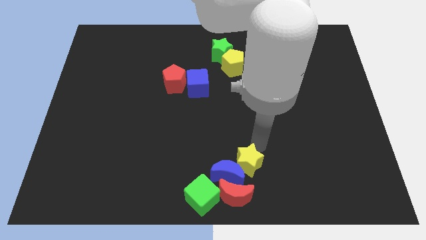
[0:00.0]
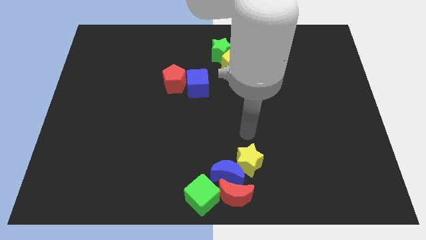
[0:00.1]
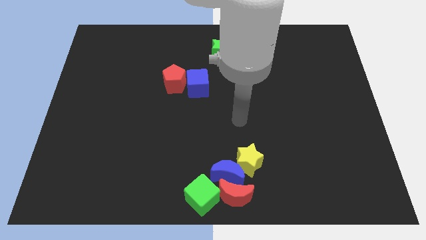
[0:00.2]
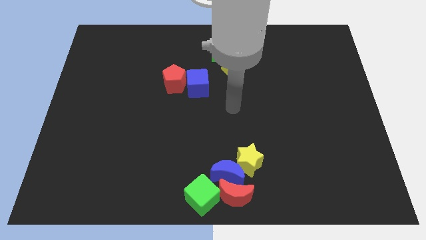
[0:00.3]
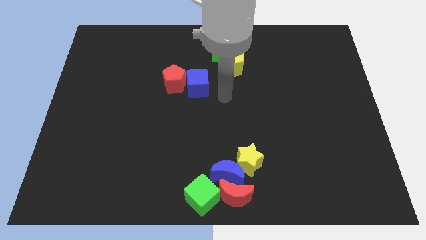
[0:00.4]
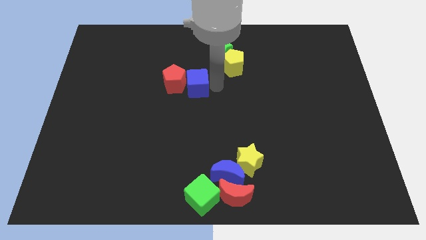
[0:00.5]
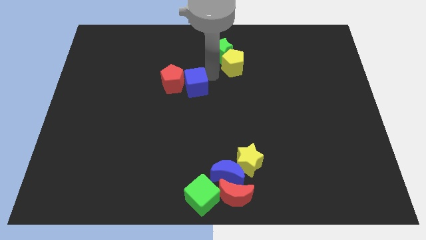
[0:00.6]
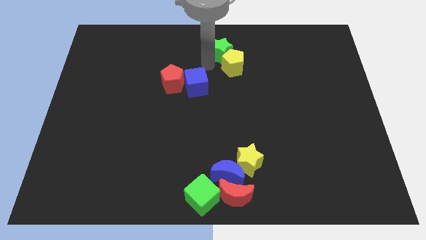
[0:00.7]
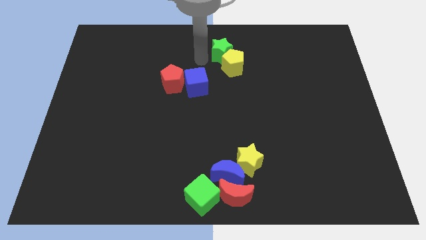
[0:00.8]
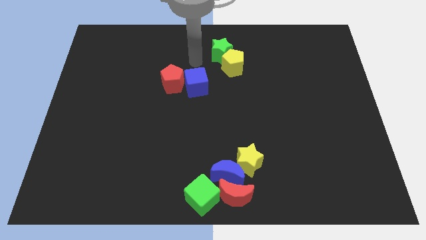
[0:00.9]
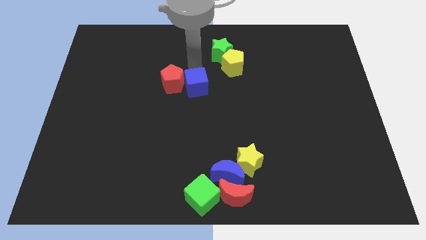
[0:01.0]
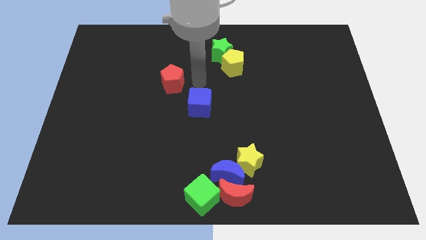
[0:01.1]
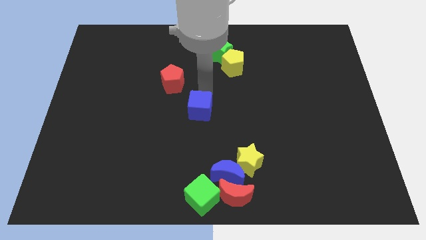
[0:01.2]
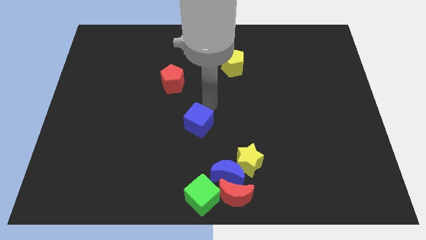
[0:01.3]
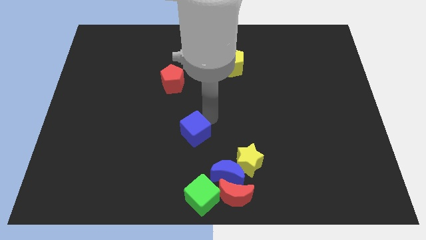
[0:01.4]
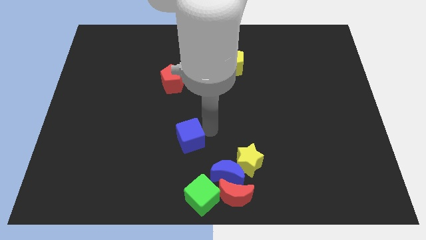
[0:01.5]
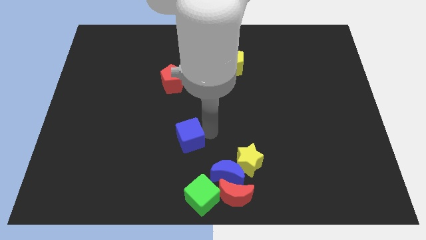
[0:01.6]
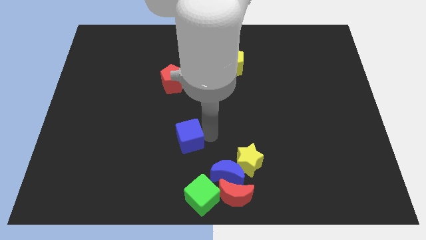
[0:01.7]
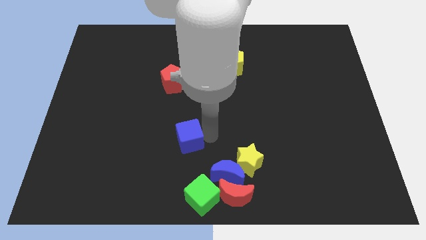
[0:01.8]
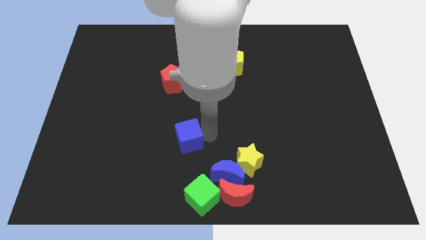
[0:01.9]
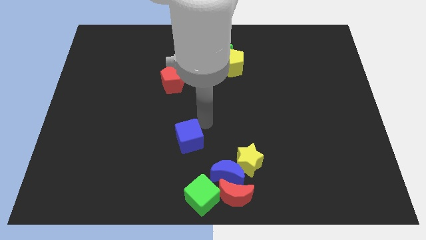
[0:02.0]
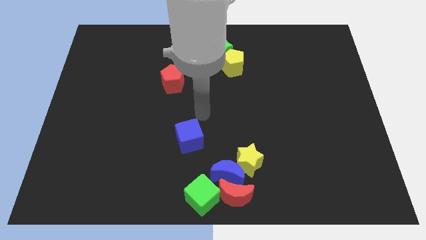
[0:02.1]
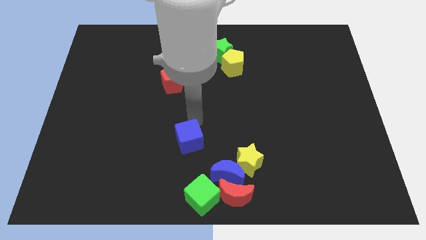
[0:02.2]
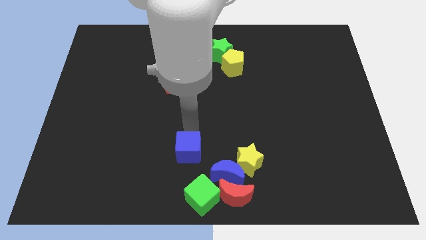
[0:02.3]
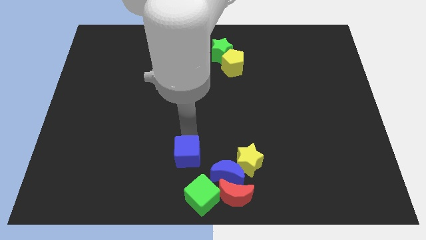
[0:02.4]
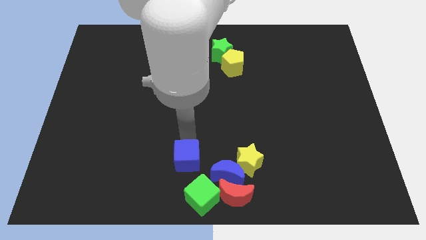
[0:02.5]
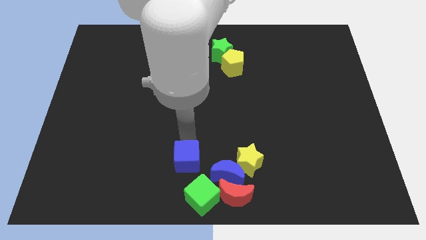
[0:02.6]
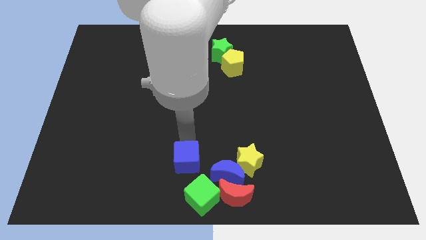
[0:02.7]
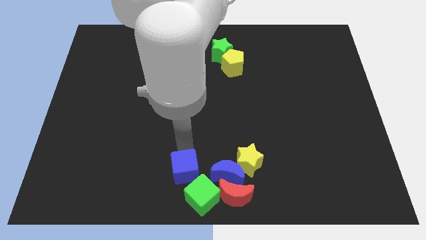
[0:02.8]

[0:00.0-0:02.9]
put the blue cube at the top left side of green cube

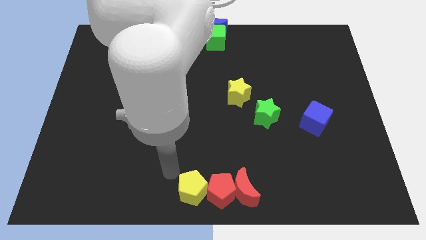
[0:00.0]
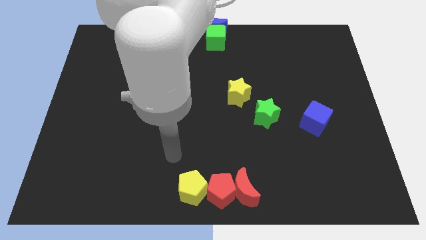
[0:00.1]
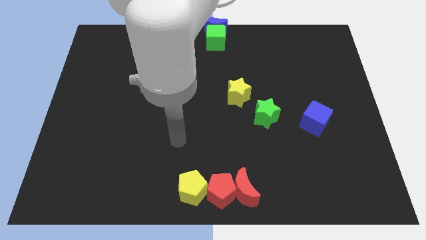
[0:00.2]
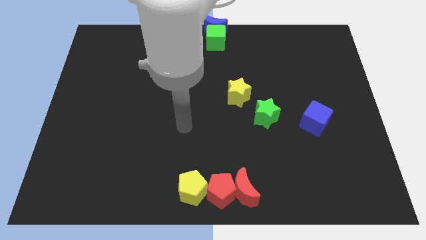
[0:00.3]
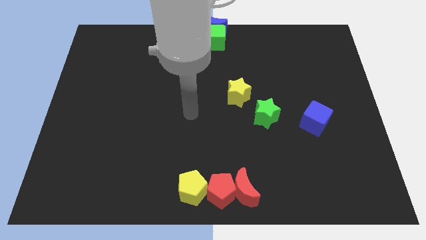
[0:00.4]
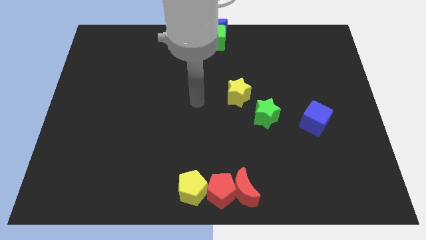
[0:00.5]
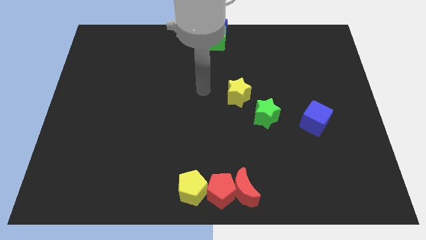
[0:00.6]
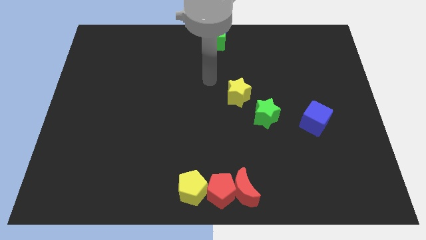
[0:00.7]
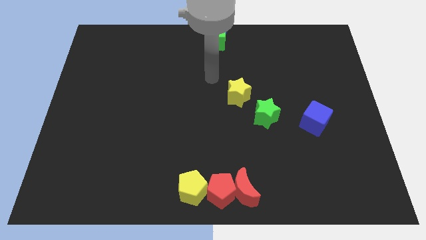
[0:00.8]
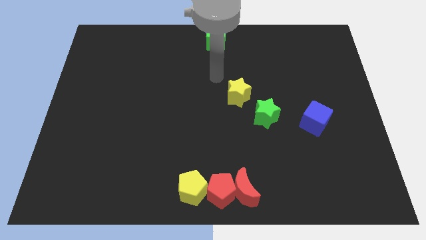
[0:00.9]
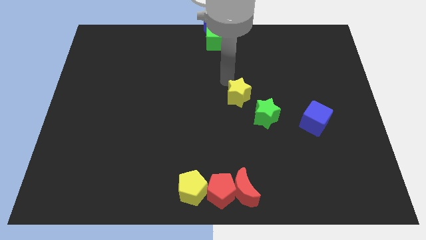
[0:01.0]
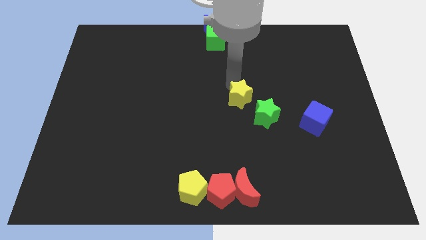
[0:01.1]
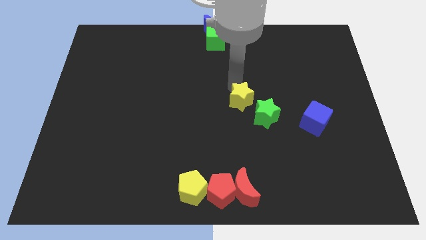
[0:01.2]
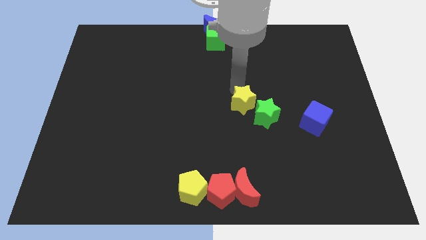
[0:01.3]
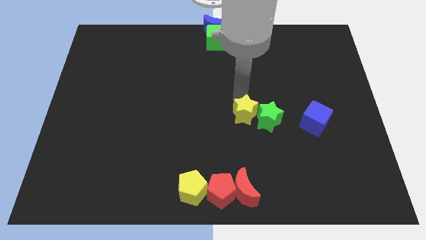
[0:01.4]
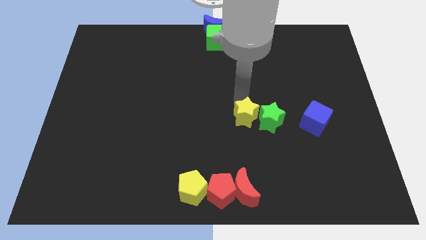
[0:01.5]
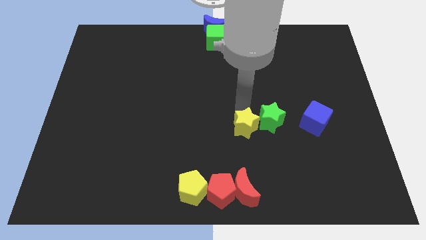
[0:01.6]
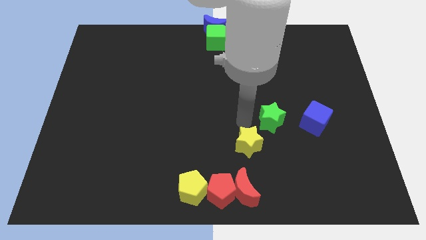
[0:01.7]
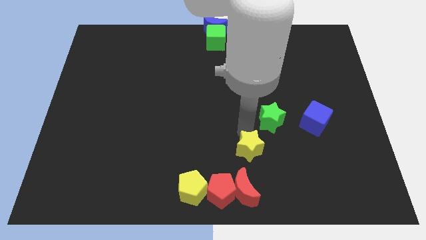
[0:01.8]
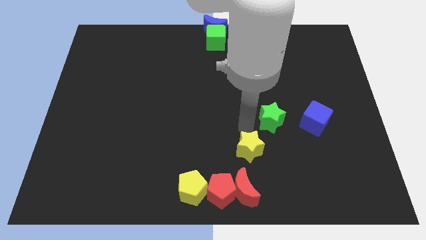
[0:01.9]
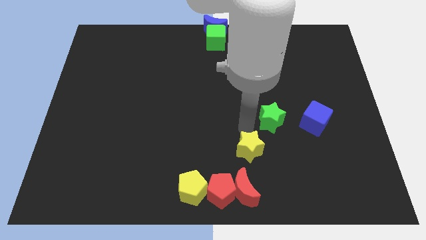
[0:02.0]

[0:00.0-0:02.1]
place the yellow star above the red moon

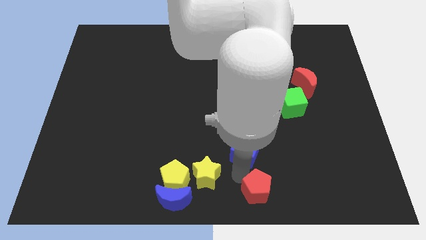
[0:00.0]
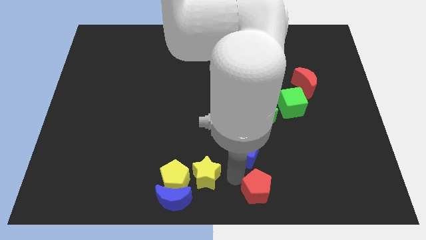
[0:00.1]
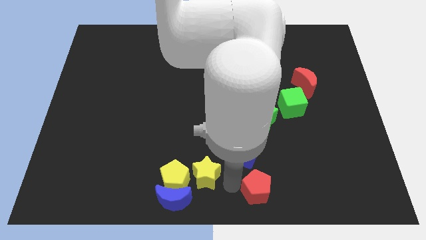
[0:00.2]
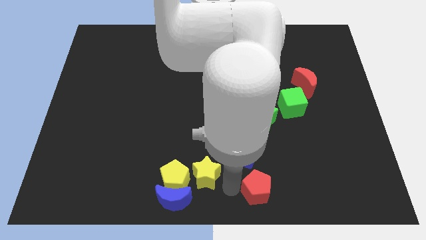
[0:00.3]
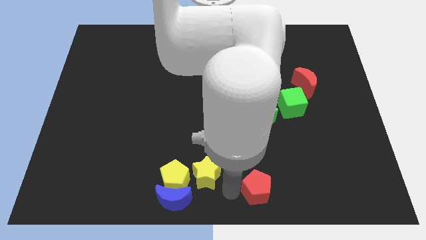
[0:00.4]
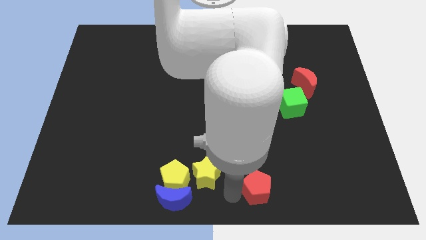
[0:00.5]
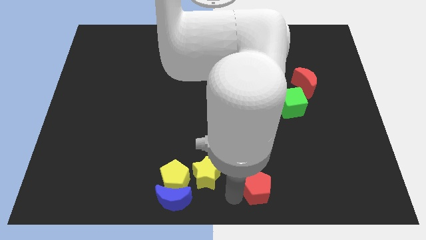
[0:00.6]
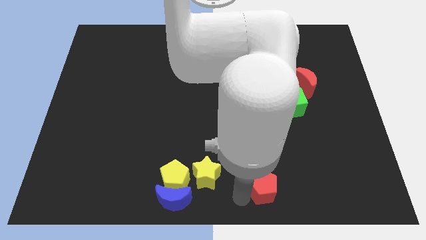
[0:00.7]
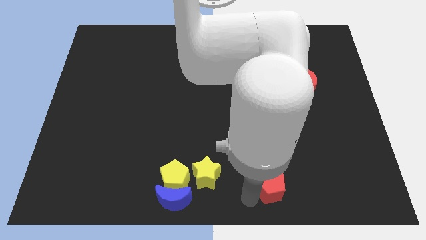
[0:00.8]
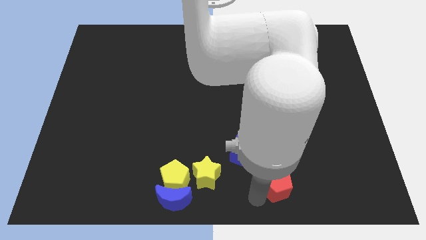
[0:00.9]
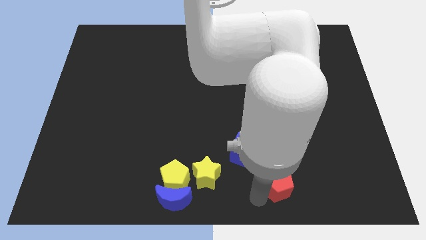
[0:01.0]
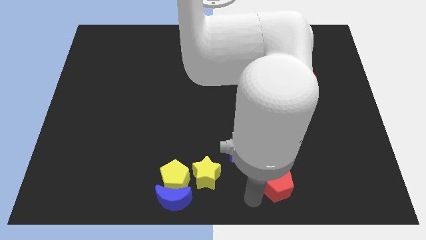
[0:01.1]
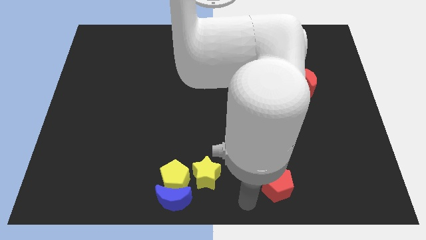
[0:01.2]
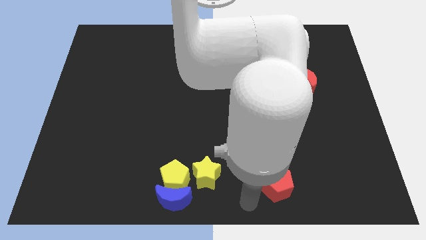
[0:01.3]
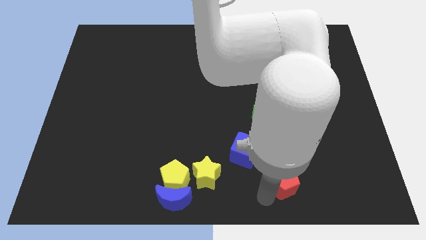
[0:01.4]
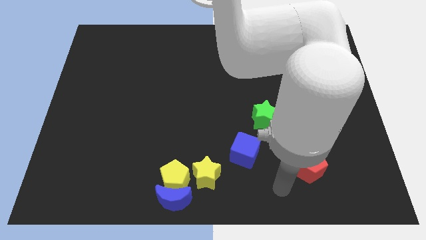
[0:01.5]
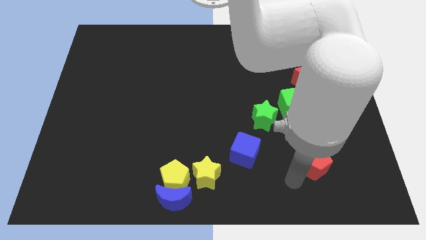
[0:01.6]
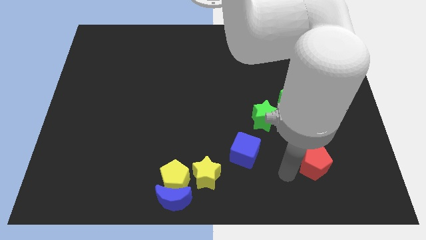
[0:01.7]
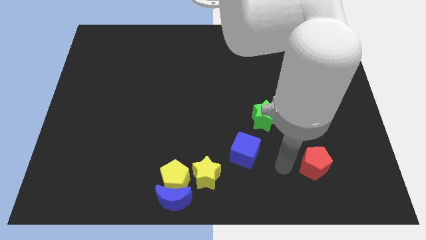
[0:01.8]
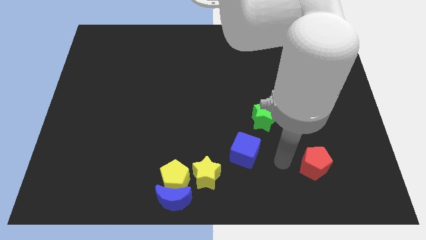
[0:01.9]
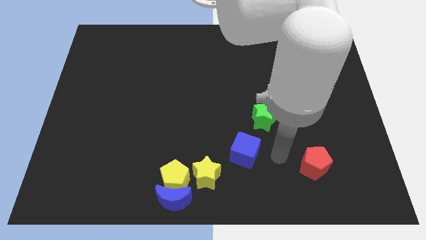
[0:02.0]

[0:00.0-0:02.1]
push the red pentagon to the right of the blue cube

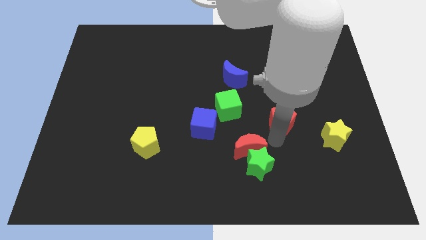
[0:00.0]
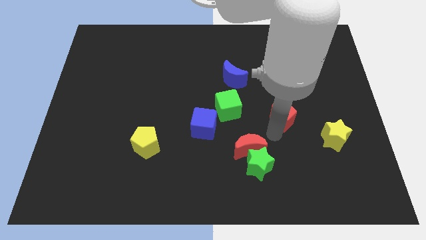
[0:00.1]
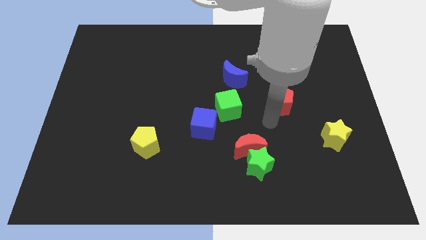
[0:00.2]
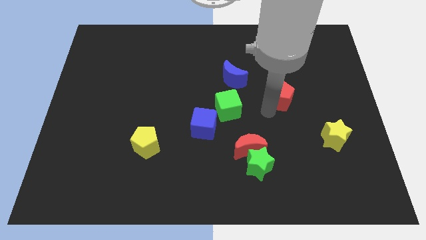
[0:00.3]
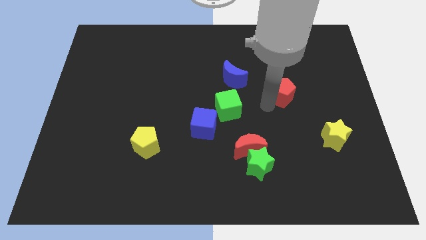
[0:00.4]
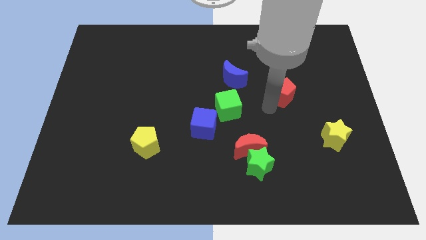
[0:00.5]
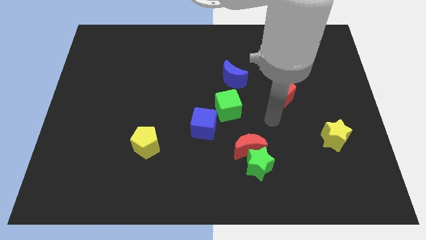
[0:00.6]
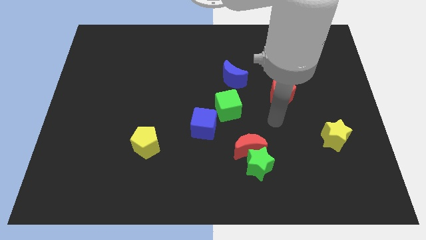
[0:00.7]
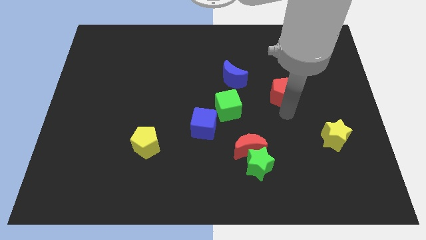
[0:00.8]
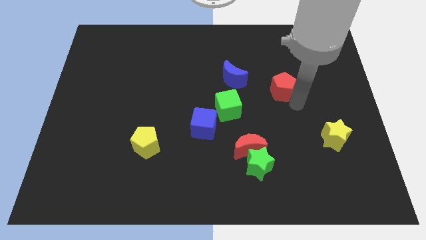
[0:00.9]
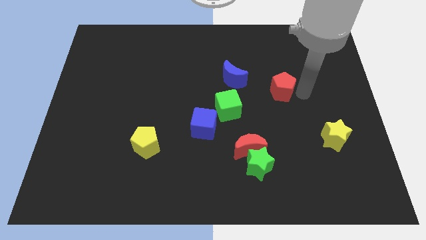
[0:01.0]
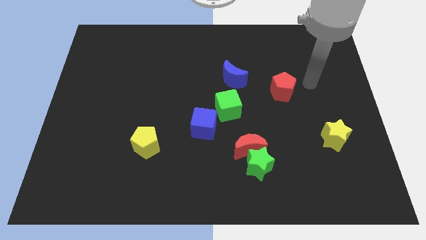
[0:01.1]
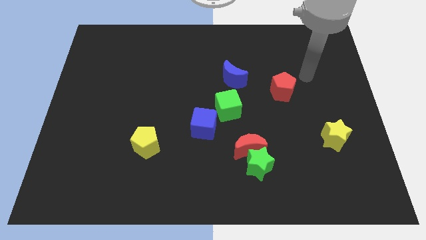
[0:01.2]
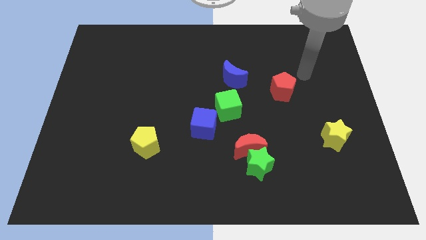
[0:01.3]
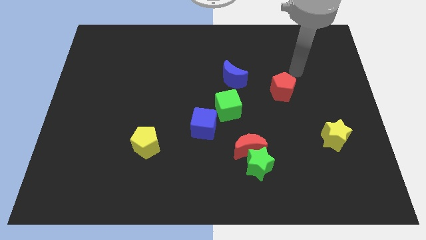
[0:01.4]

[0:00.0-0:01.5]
move the red pentagon upwards

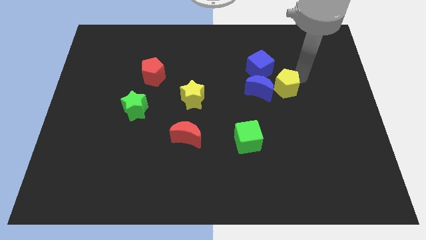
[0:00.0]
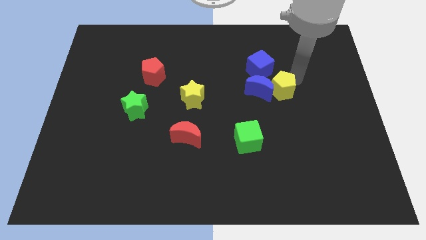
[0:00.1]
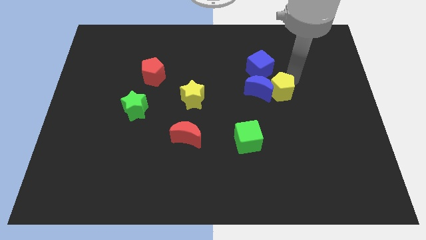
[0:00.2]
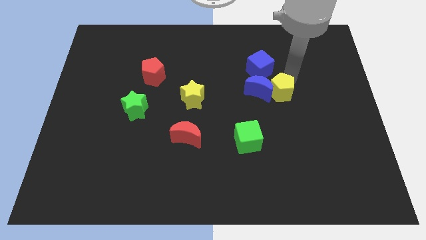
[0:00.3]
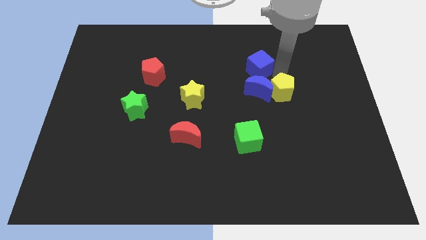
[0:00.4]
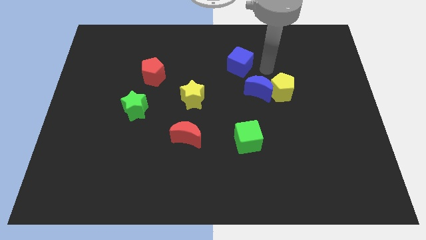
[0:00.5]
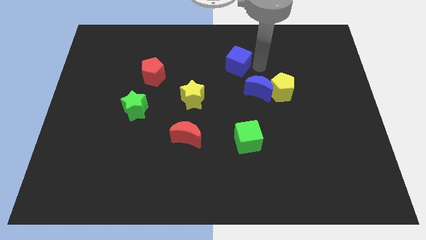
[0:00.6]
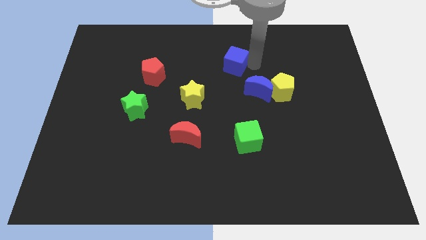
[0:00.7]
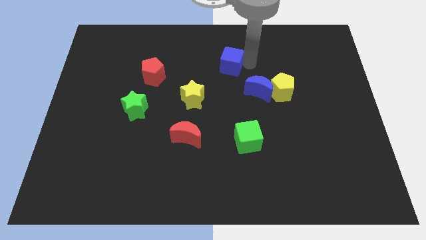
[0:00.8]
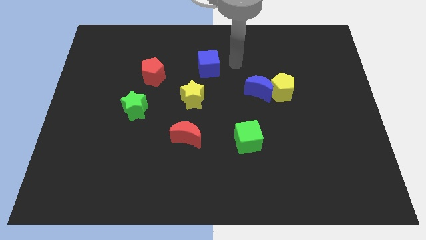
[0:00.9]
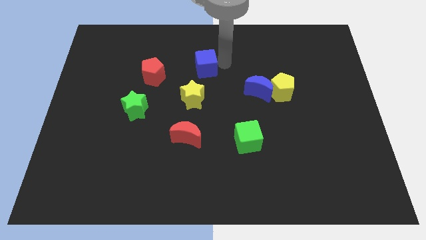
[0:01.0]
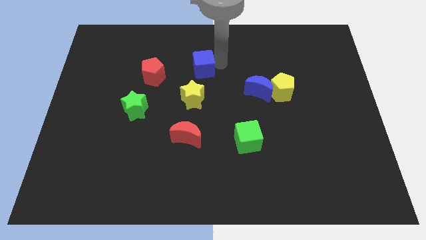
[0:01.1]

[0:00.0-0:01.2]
separate the blue cube from the blue crescent
